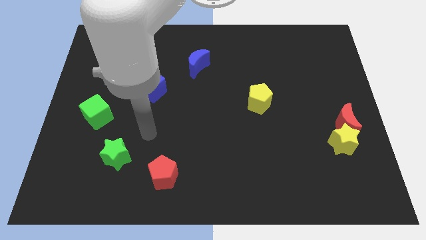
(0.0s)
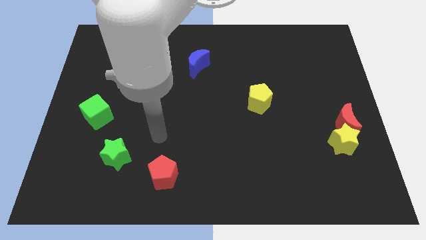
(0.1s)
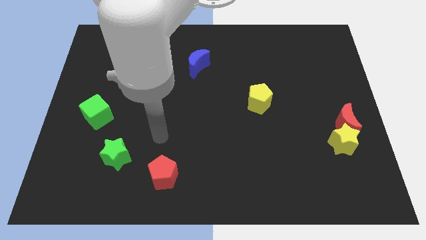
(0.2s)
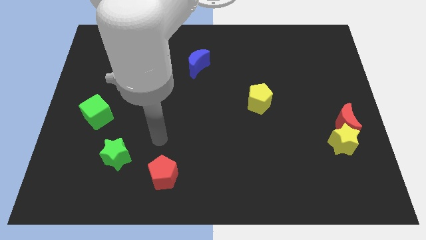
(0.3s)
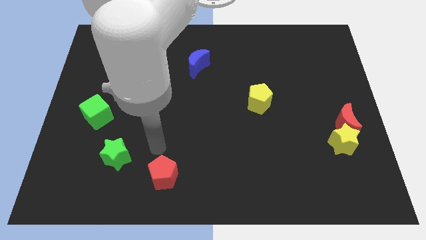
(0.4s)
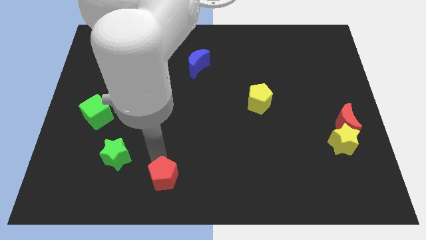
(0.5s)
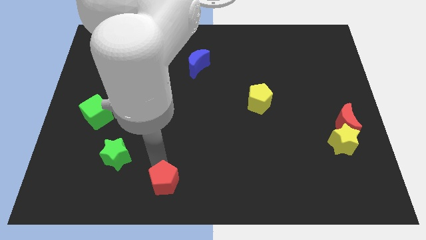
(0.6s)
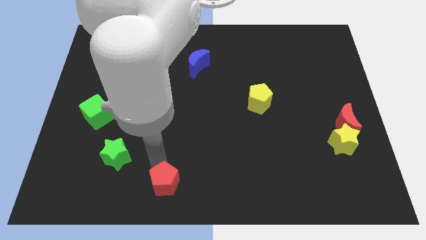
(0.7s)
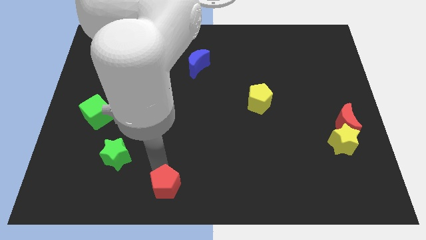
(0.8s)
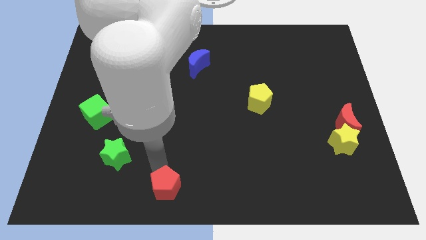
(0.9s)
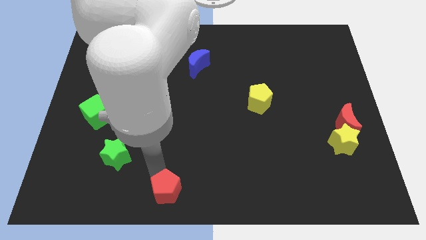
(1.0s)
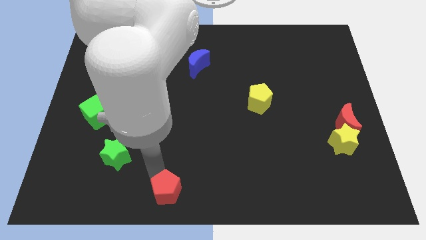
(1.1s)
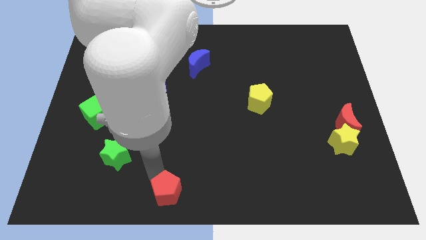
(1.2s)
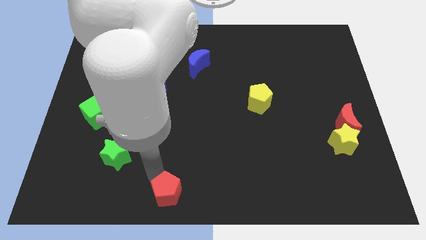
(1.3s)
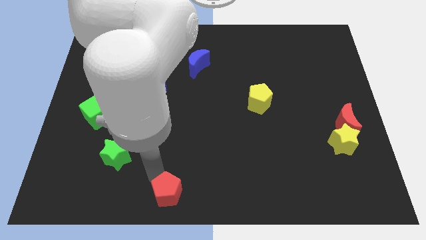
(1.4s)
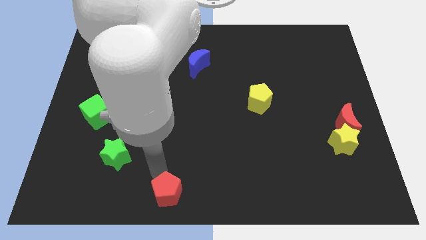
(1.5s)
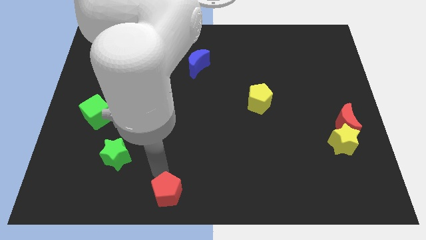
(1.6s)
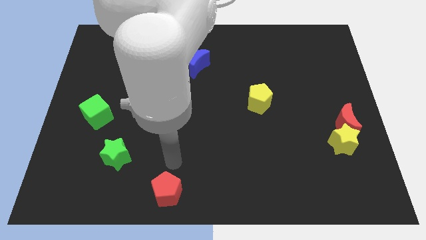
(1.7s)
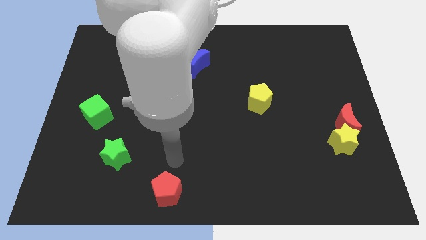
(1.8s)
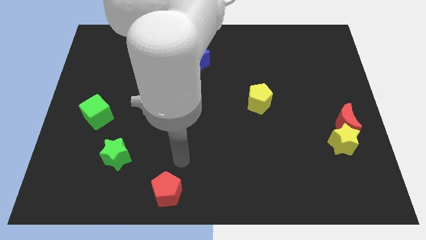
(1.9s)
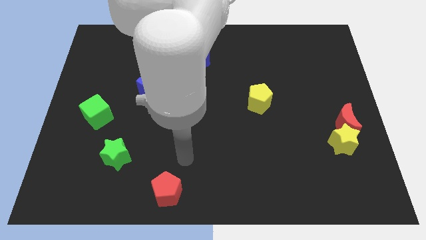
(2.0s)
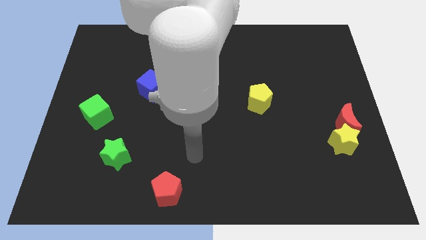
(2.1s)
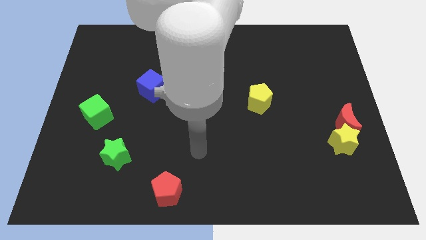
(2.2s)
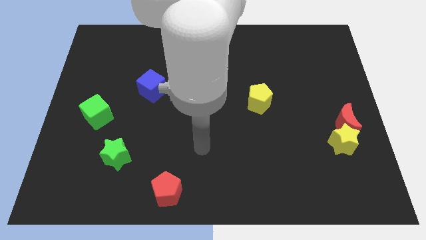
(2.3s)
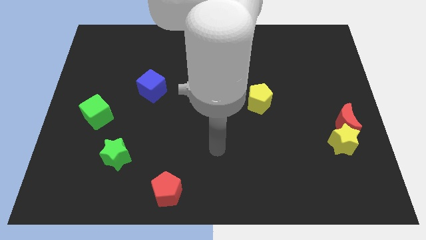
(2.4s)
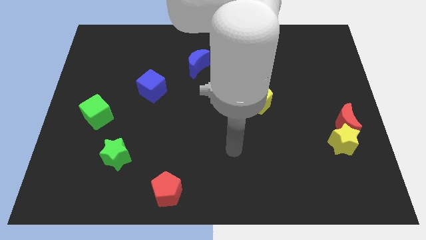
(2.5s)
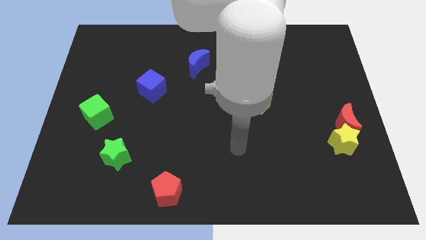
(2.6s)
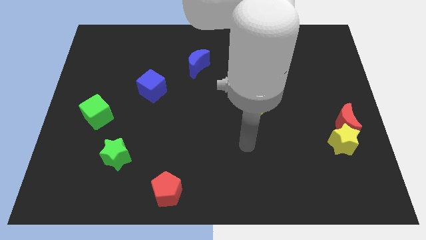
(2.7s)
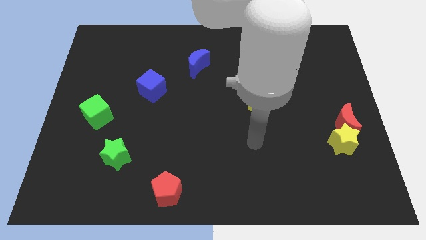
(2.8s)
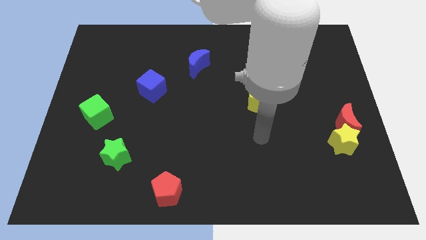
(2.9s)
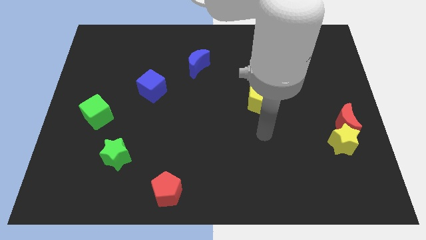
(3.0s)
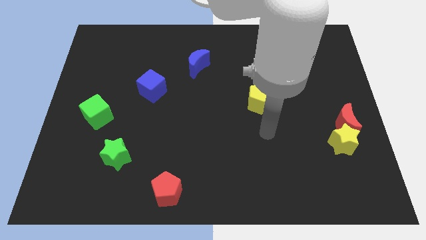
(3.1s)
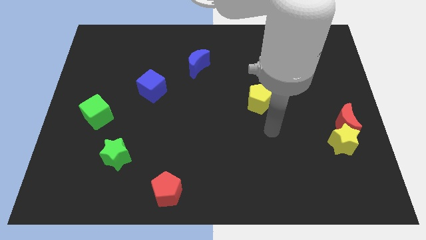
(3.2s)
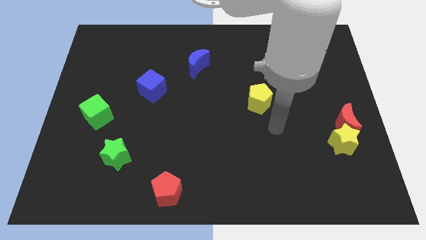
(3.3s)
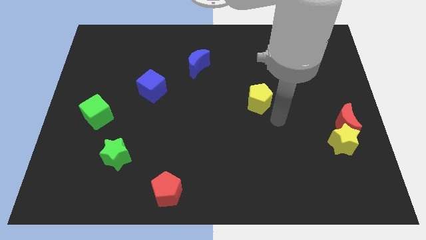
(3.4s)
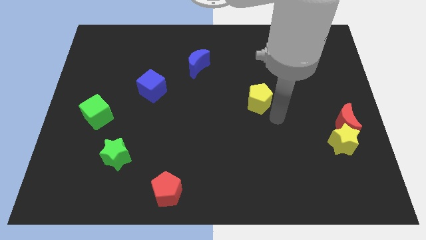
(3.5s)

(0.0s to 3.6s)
move red pentagon to the bottom center of the board

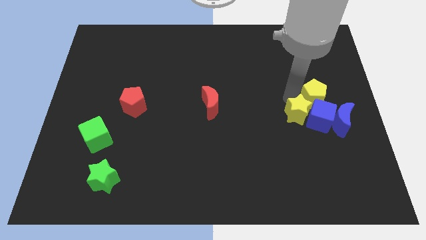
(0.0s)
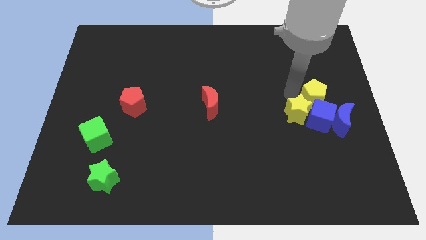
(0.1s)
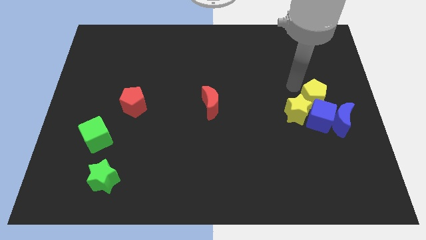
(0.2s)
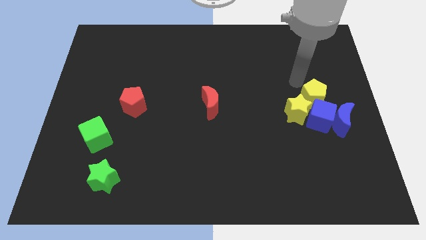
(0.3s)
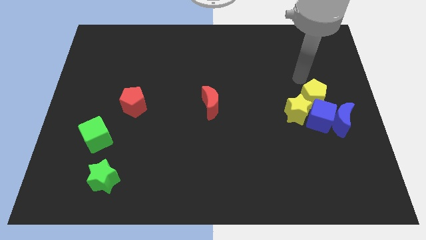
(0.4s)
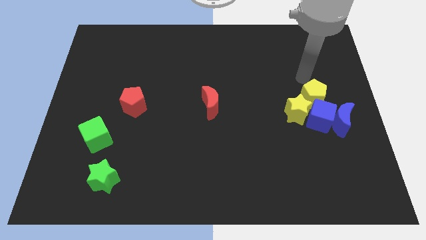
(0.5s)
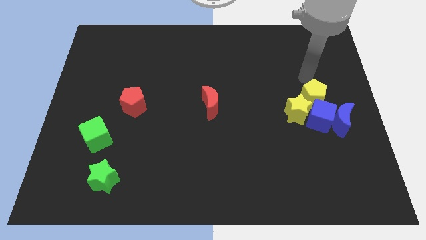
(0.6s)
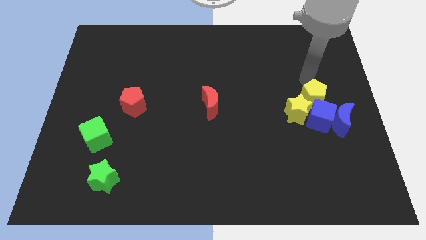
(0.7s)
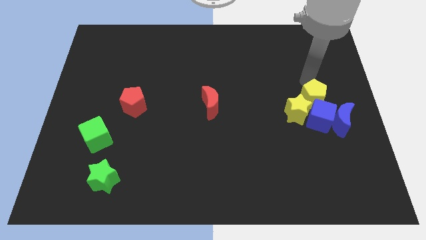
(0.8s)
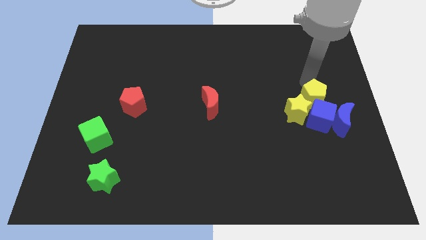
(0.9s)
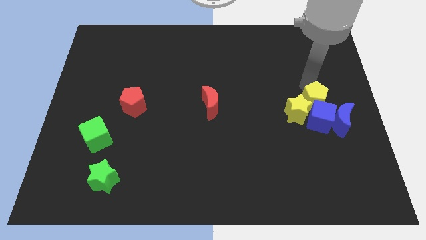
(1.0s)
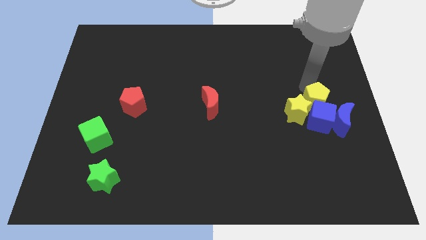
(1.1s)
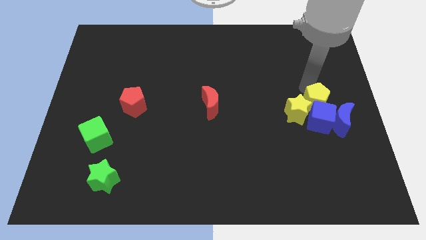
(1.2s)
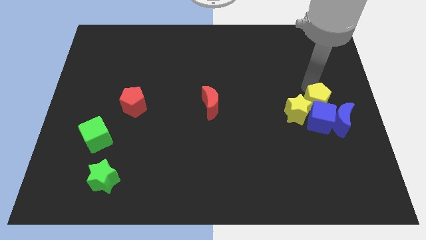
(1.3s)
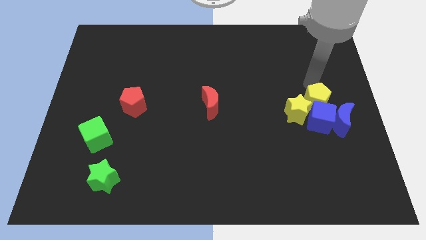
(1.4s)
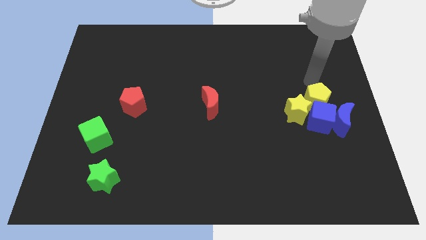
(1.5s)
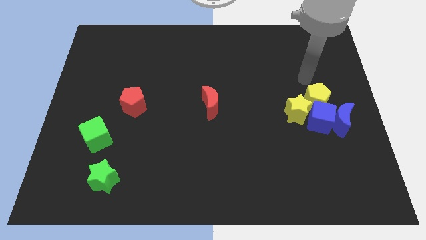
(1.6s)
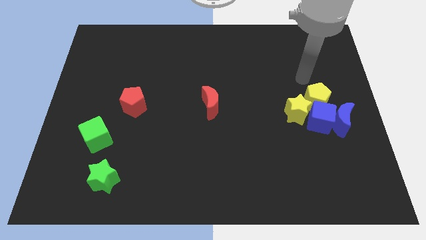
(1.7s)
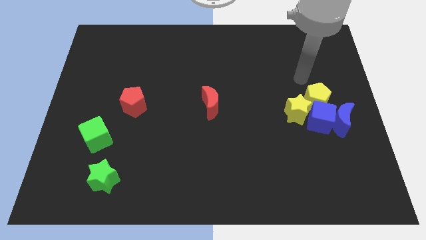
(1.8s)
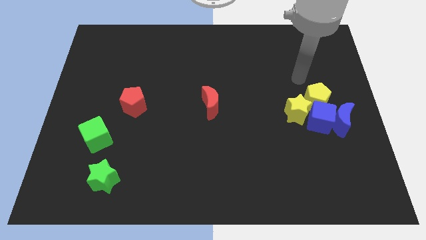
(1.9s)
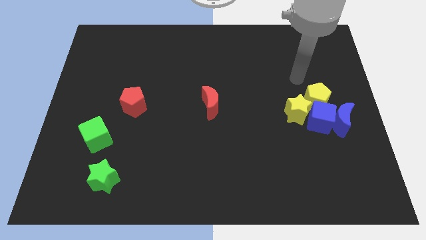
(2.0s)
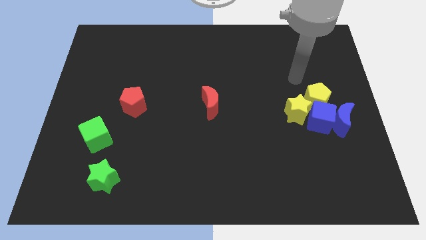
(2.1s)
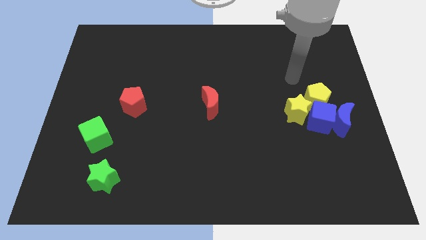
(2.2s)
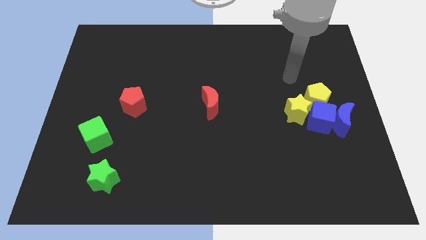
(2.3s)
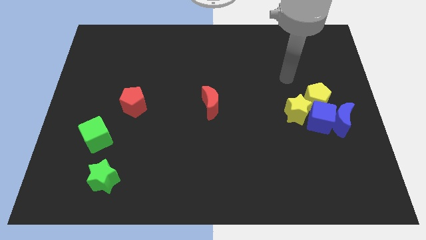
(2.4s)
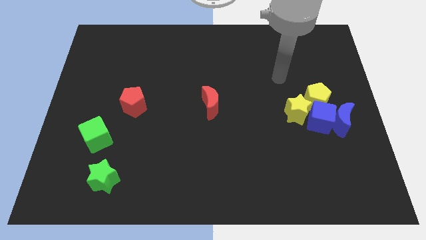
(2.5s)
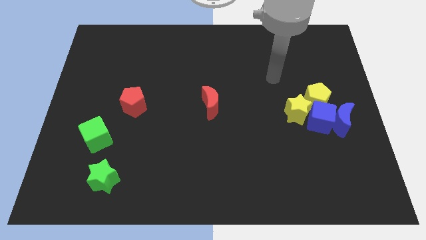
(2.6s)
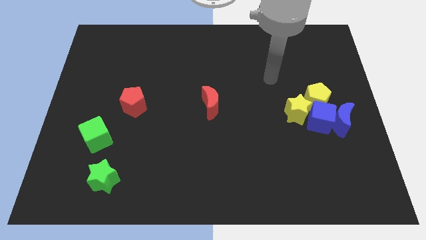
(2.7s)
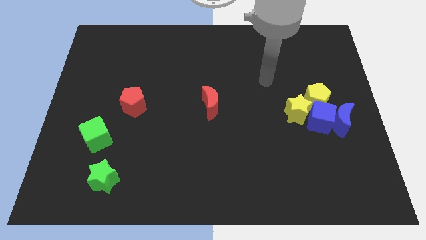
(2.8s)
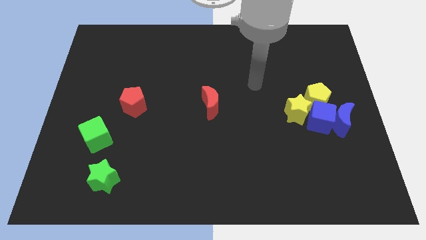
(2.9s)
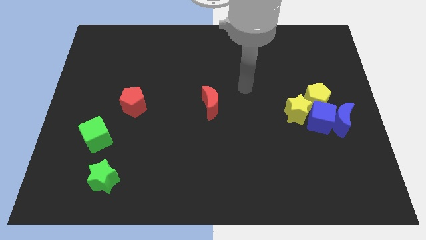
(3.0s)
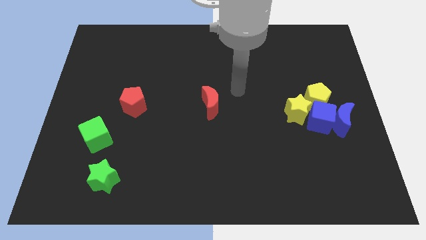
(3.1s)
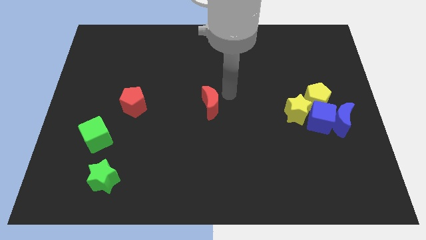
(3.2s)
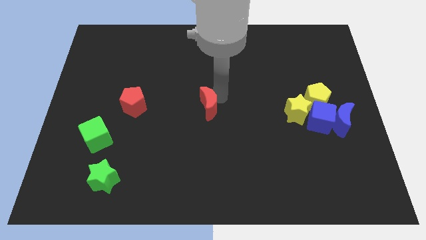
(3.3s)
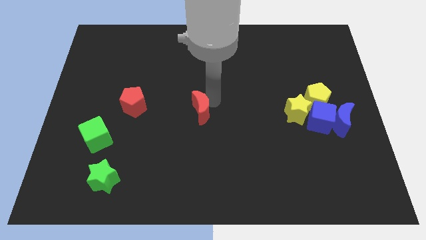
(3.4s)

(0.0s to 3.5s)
move your arm towards the right side of the red crescent

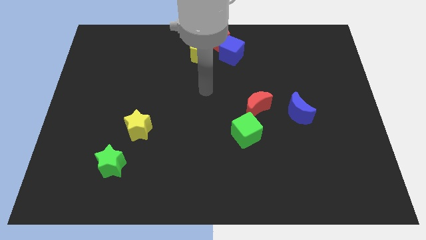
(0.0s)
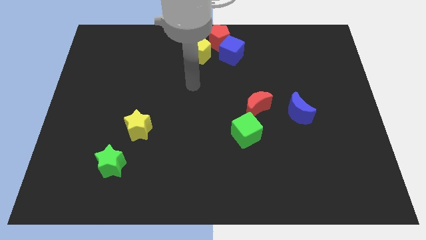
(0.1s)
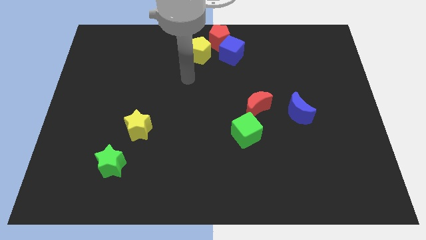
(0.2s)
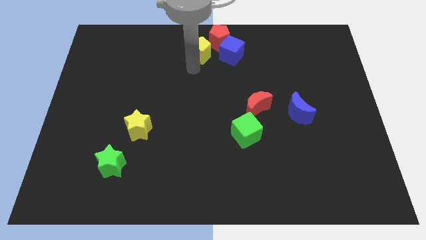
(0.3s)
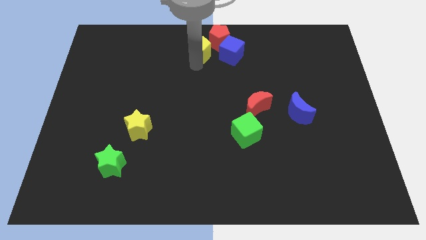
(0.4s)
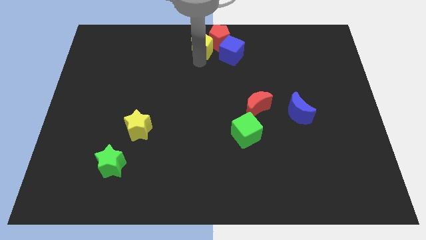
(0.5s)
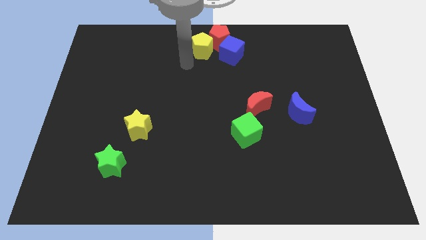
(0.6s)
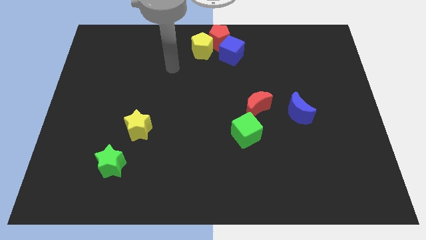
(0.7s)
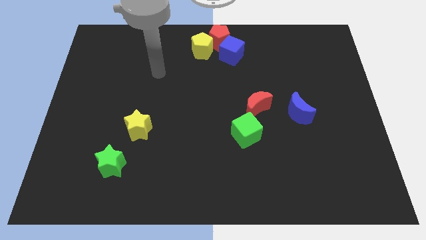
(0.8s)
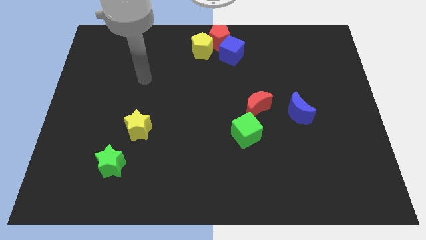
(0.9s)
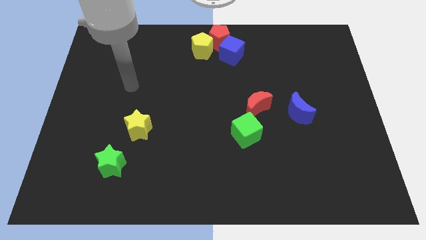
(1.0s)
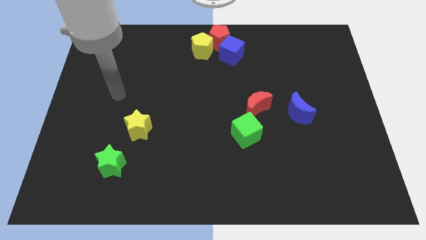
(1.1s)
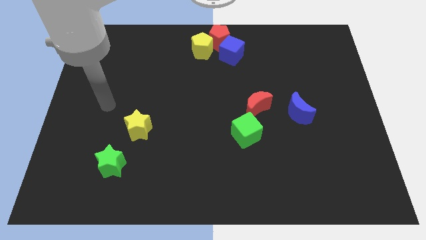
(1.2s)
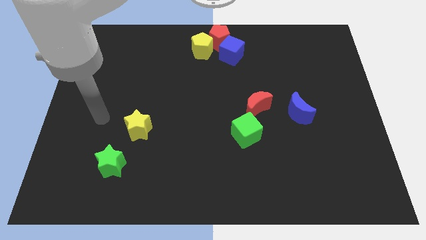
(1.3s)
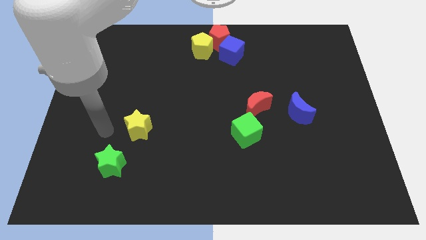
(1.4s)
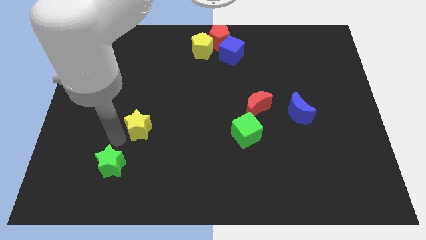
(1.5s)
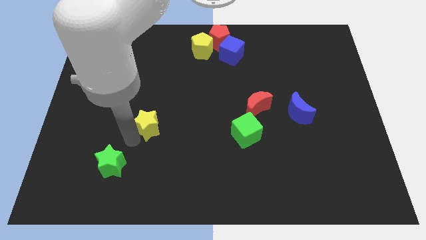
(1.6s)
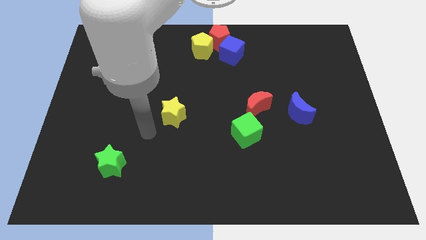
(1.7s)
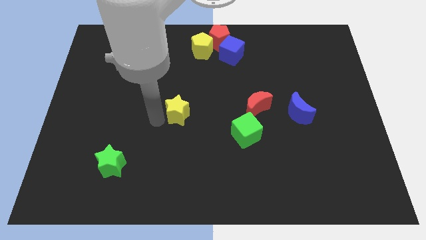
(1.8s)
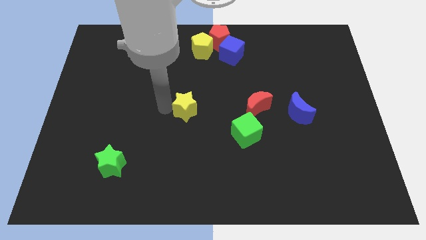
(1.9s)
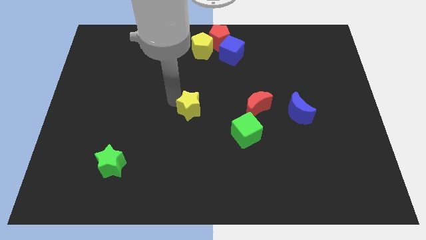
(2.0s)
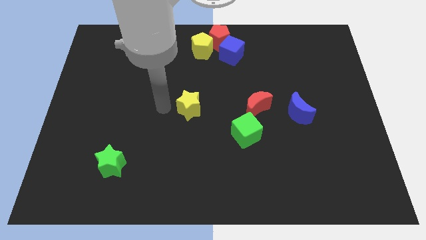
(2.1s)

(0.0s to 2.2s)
move the yellow star to the left side of the red moon
